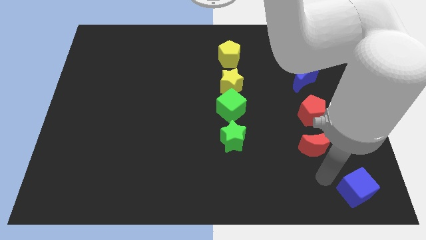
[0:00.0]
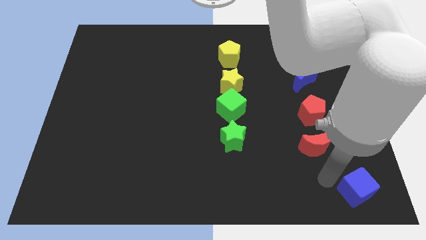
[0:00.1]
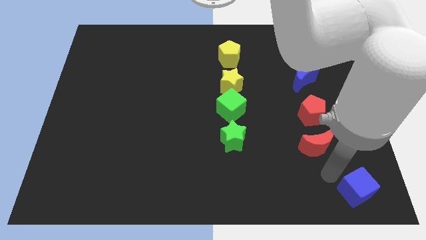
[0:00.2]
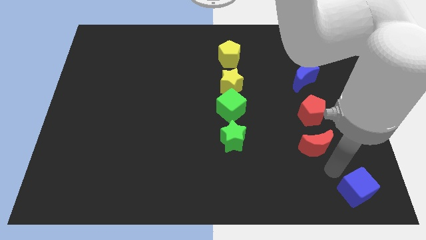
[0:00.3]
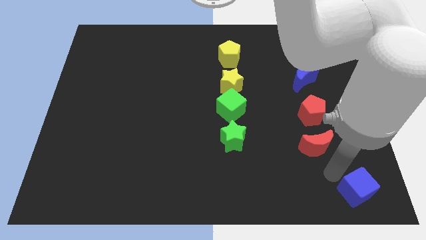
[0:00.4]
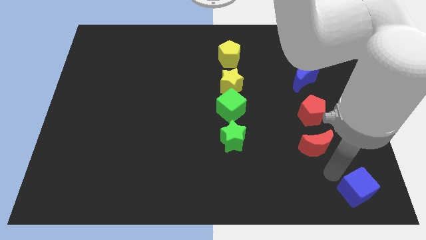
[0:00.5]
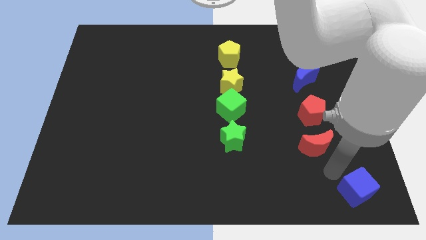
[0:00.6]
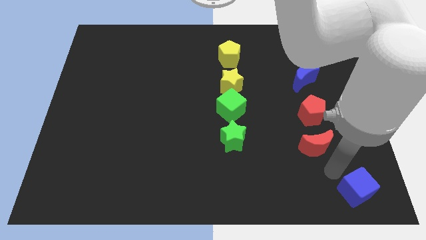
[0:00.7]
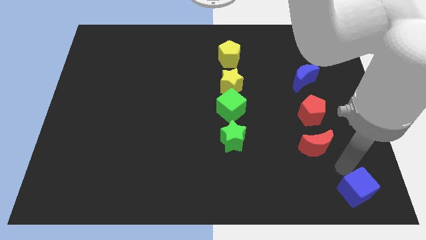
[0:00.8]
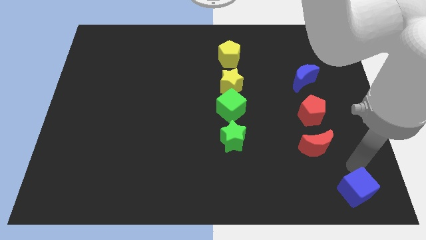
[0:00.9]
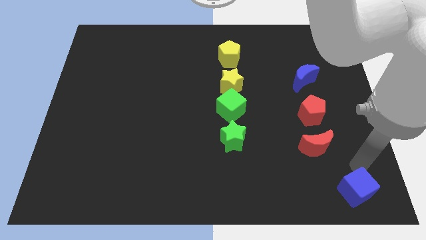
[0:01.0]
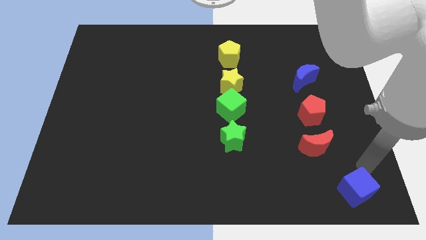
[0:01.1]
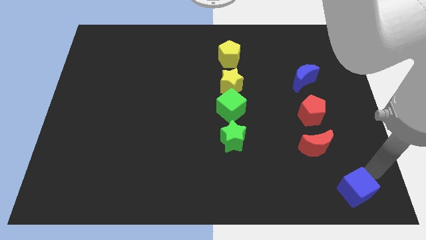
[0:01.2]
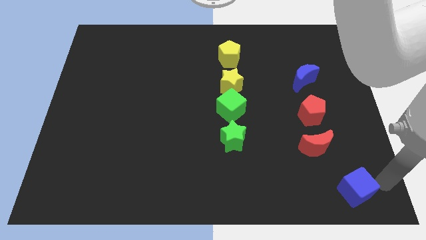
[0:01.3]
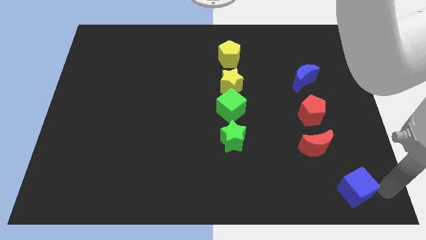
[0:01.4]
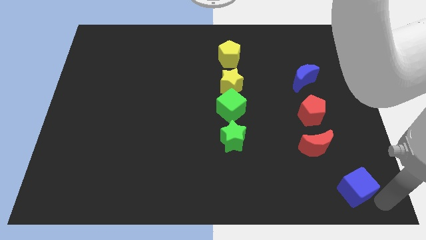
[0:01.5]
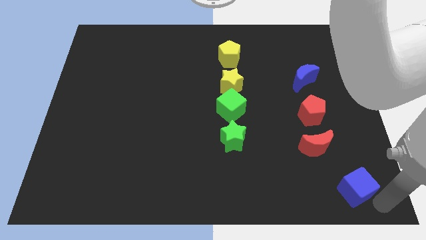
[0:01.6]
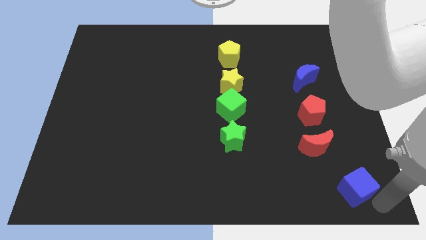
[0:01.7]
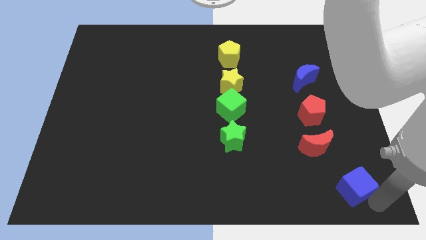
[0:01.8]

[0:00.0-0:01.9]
move the blue cube slightly up towards the red crescent

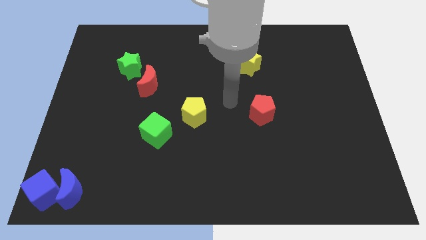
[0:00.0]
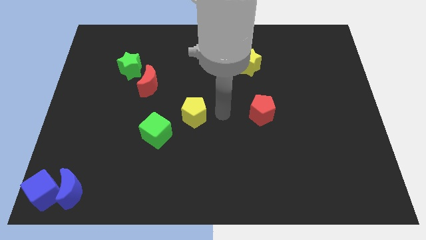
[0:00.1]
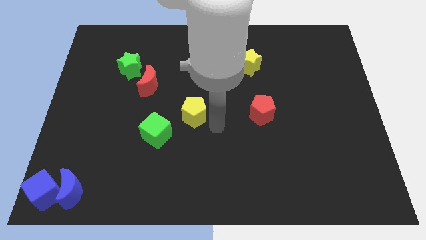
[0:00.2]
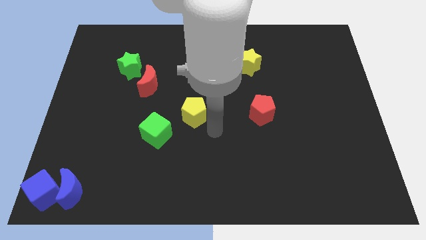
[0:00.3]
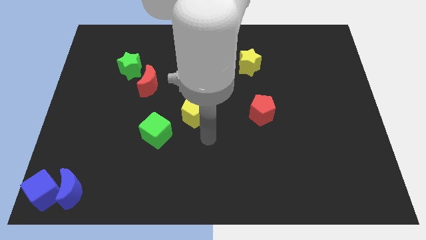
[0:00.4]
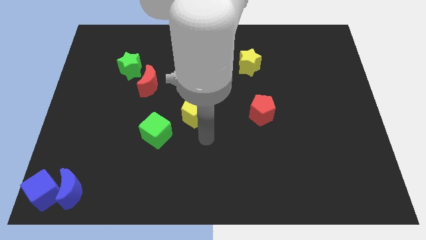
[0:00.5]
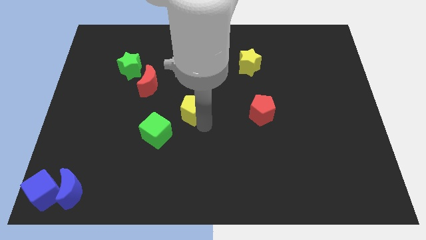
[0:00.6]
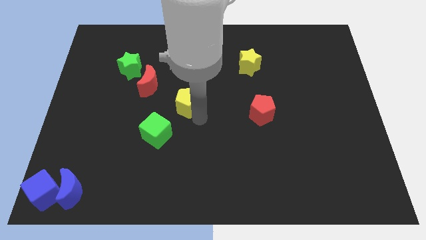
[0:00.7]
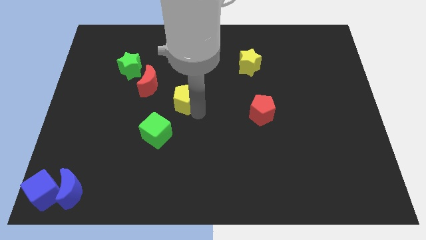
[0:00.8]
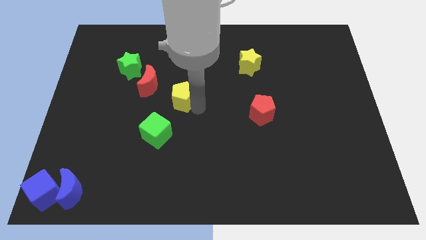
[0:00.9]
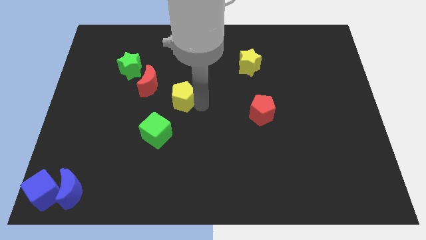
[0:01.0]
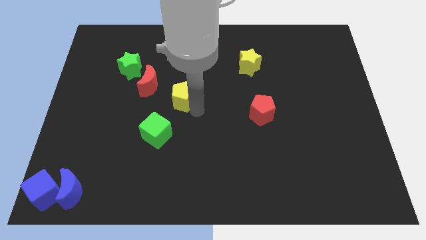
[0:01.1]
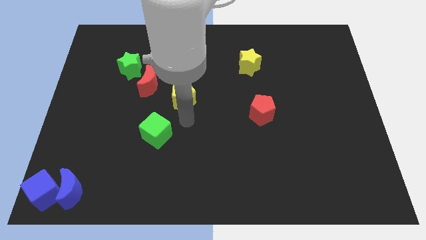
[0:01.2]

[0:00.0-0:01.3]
move the yellow pentagon slightly towards the red moon

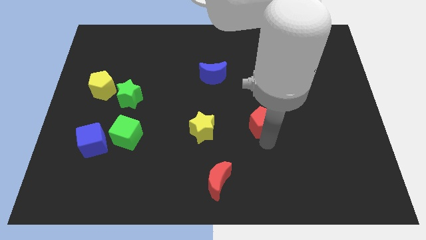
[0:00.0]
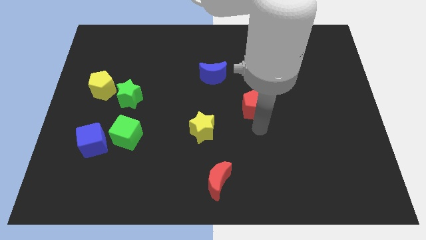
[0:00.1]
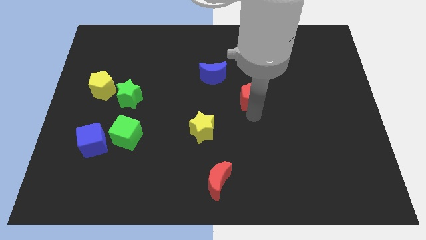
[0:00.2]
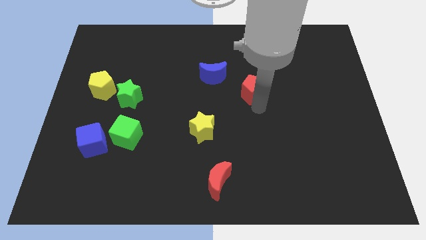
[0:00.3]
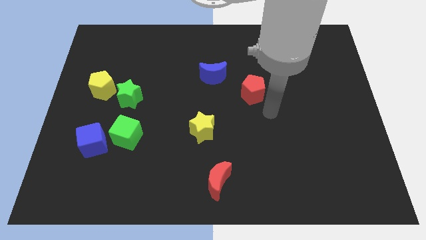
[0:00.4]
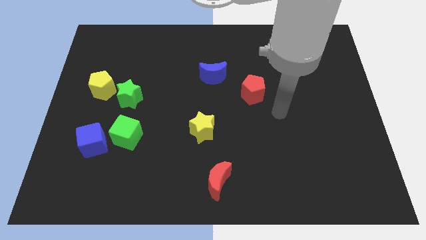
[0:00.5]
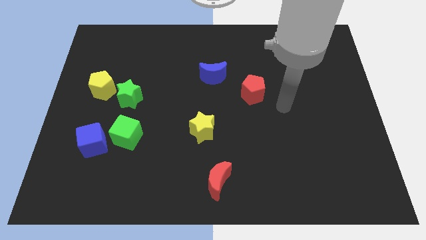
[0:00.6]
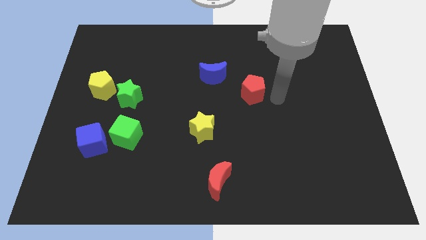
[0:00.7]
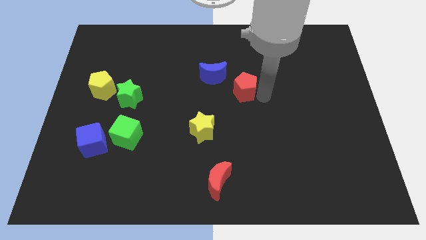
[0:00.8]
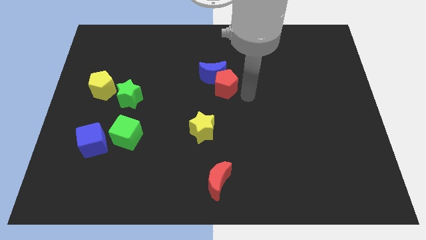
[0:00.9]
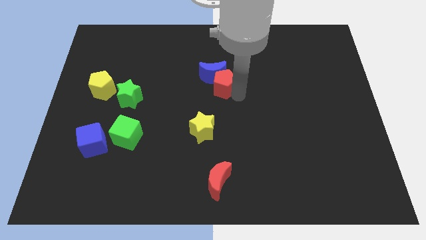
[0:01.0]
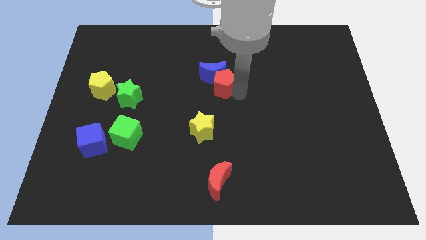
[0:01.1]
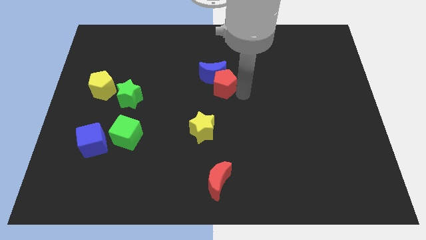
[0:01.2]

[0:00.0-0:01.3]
push the red pentagon to the bottom of the blue moon

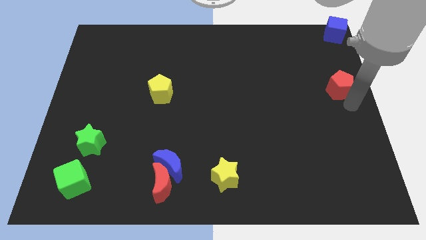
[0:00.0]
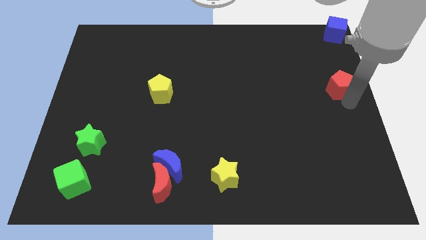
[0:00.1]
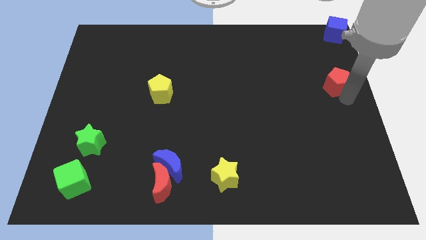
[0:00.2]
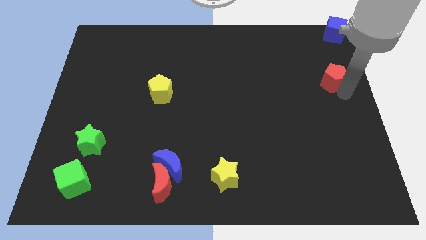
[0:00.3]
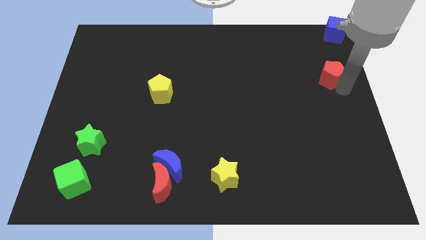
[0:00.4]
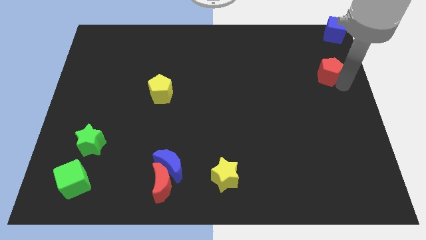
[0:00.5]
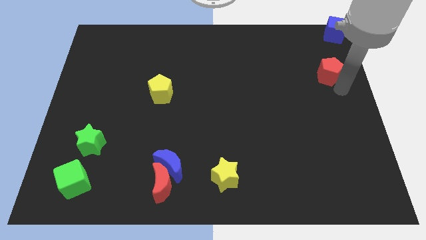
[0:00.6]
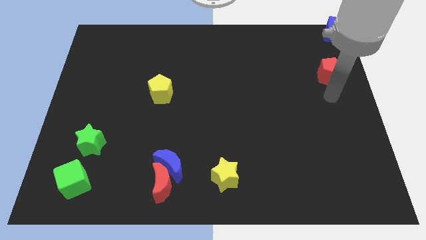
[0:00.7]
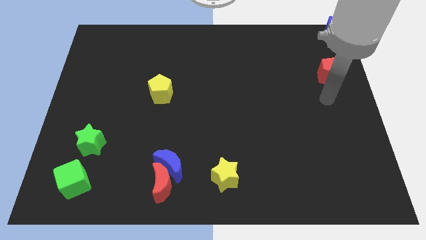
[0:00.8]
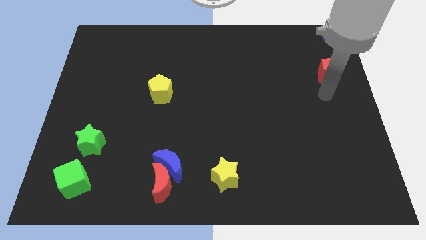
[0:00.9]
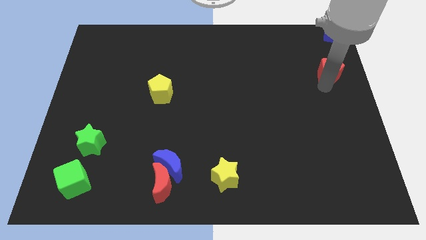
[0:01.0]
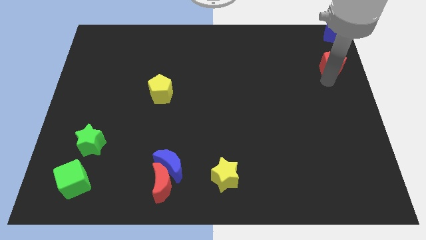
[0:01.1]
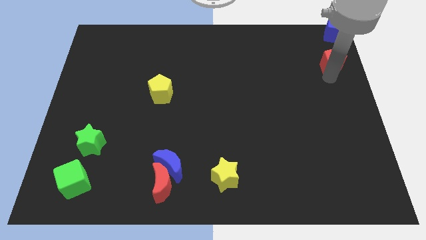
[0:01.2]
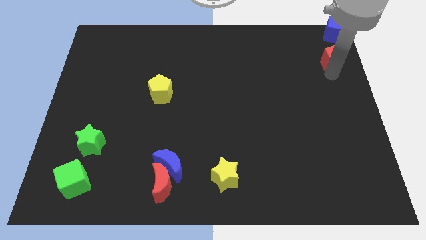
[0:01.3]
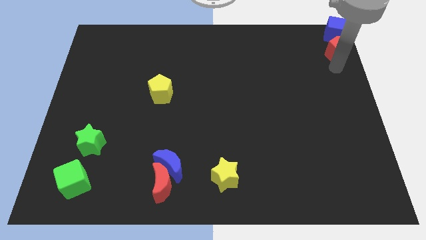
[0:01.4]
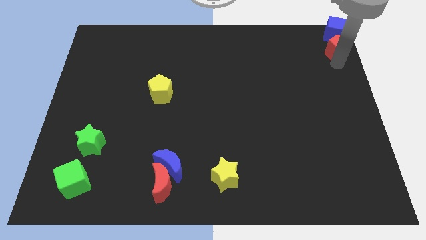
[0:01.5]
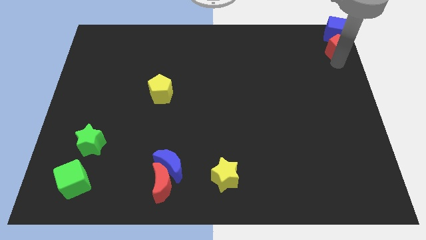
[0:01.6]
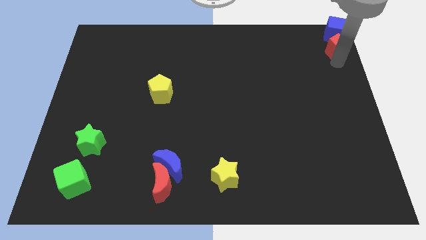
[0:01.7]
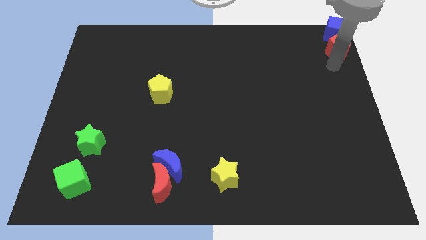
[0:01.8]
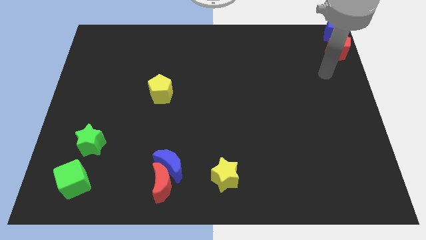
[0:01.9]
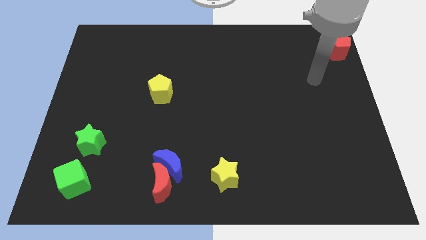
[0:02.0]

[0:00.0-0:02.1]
push red pentagon to the top right

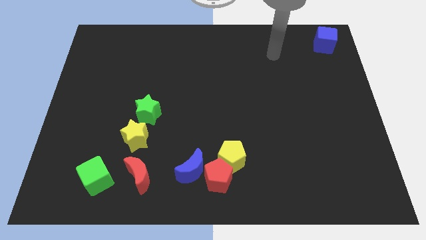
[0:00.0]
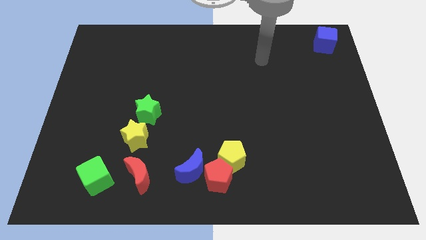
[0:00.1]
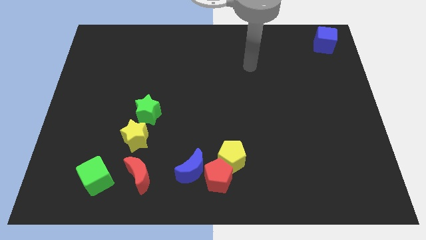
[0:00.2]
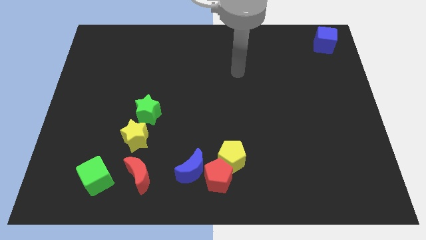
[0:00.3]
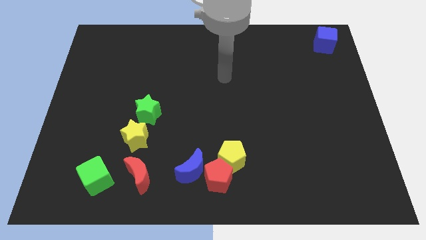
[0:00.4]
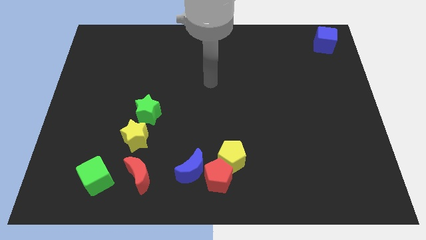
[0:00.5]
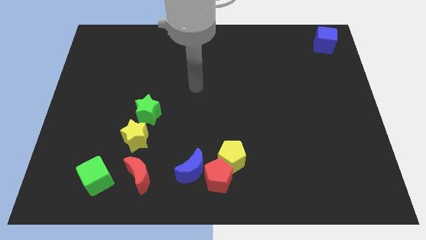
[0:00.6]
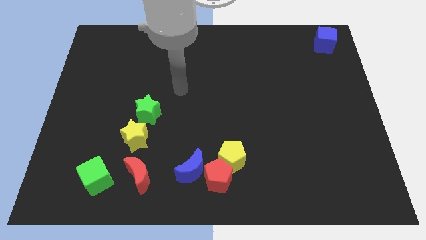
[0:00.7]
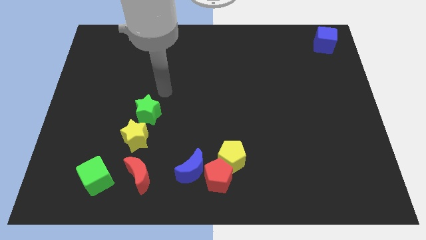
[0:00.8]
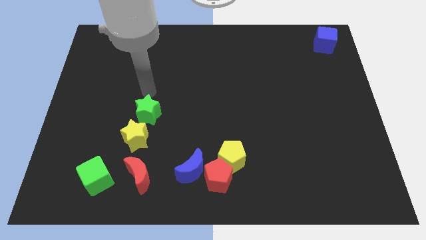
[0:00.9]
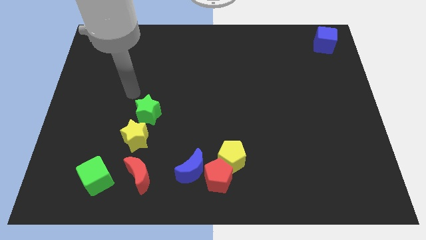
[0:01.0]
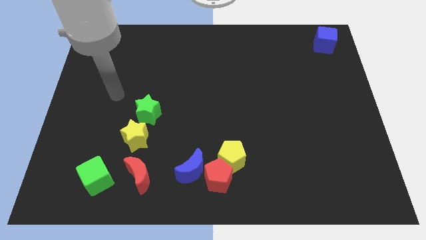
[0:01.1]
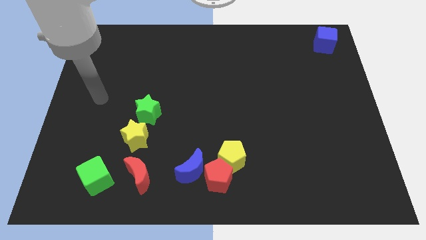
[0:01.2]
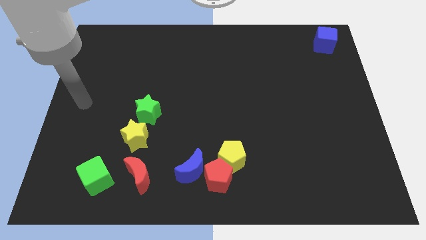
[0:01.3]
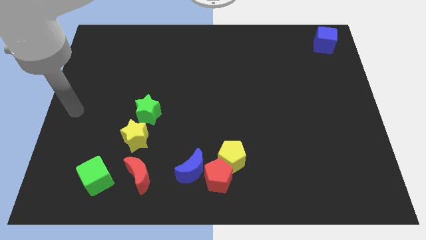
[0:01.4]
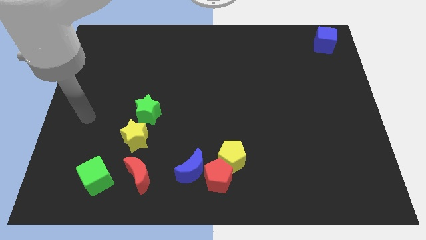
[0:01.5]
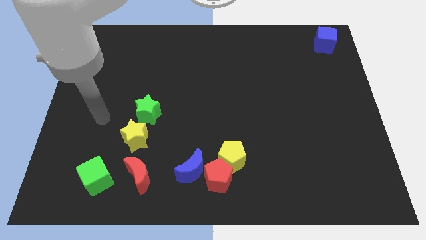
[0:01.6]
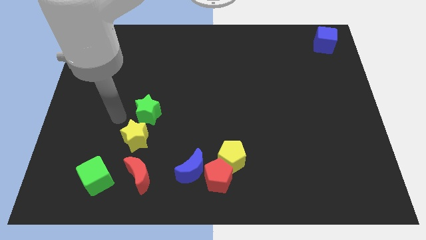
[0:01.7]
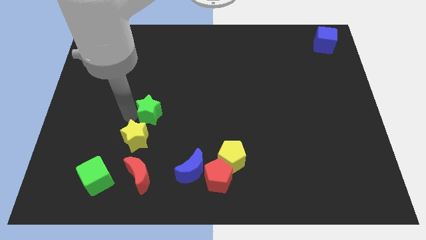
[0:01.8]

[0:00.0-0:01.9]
point the arm to the left of the green star

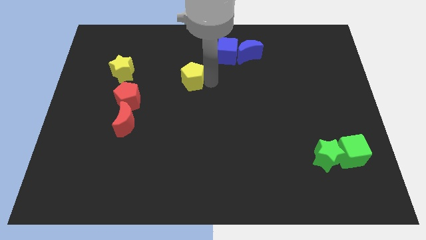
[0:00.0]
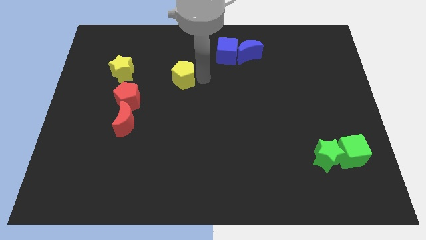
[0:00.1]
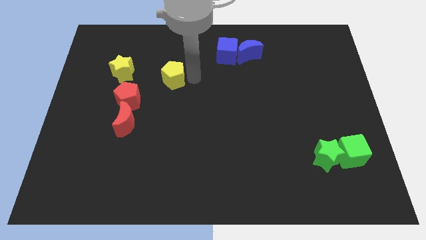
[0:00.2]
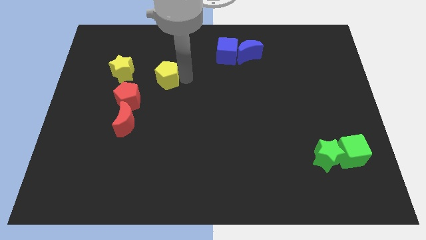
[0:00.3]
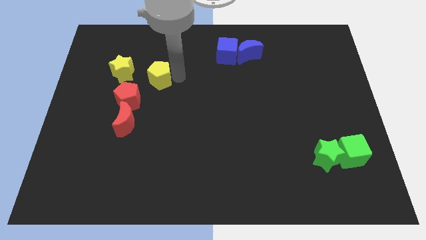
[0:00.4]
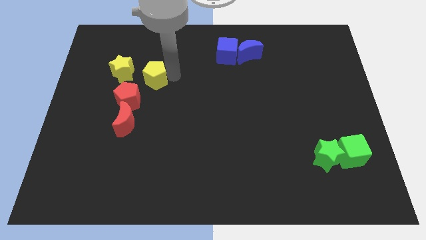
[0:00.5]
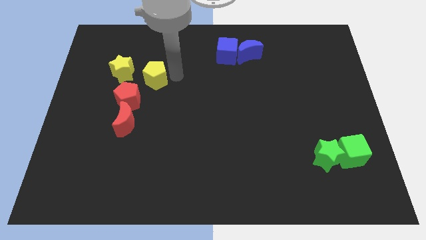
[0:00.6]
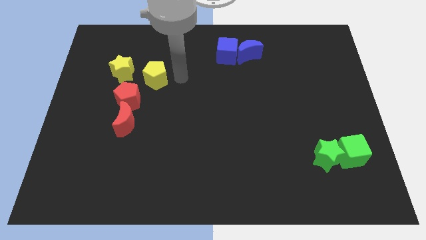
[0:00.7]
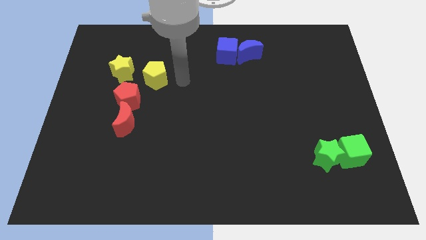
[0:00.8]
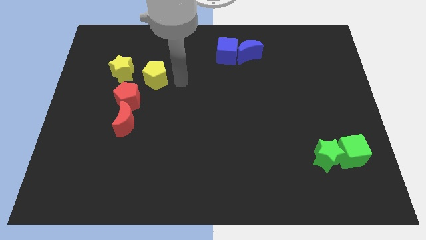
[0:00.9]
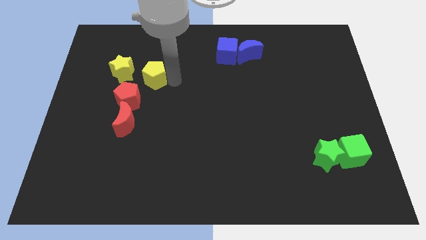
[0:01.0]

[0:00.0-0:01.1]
place yellow pentagon diagonally right to the red pentagon
